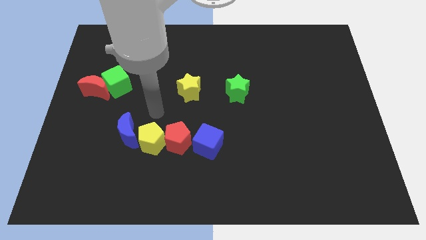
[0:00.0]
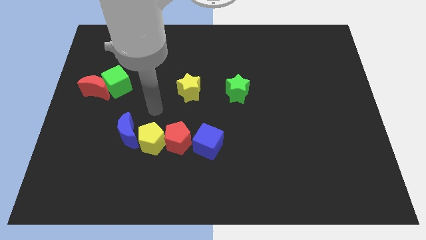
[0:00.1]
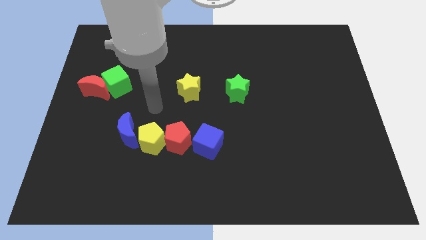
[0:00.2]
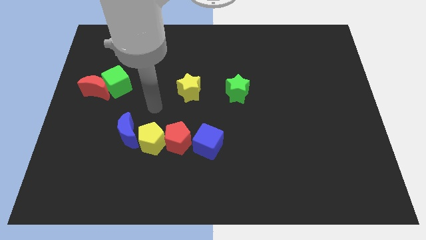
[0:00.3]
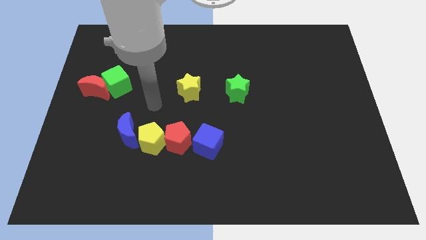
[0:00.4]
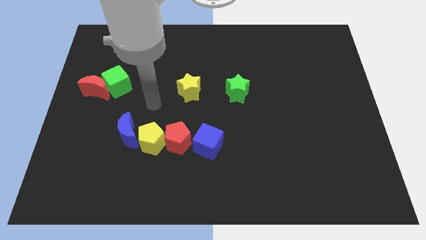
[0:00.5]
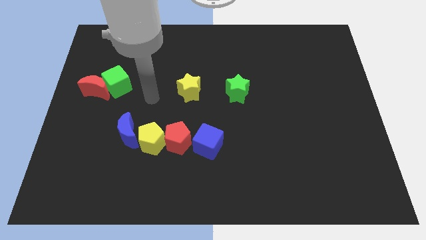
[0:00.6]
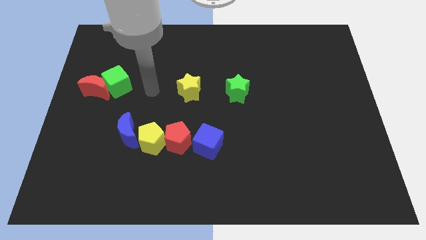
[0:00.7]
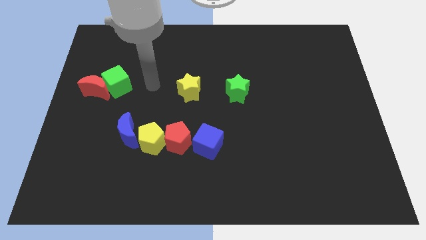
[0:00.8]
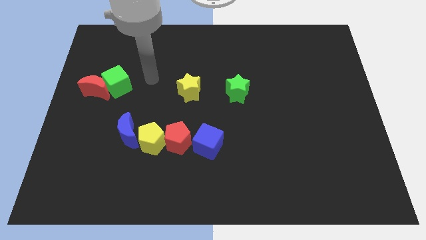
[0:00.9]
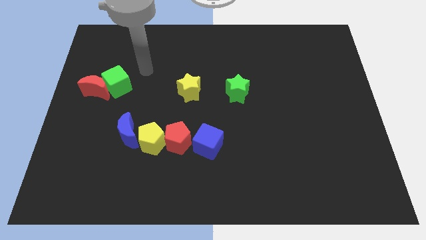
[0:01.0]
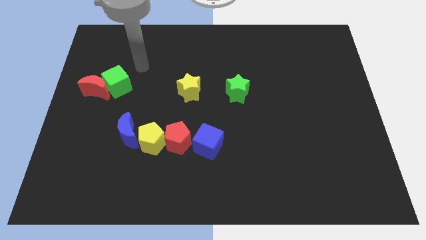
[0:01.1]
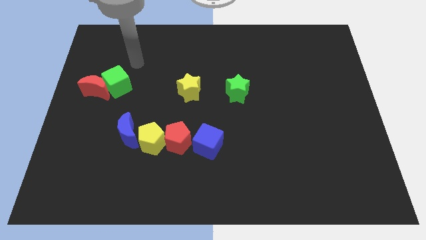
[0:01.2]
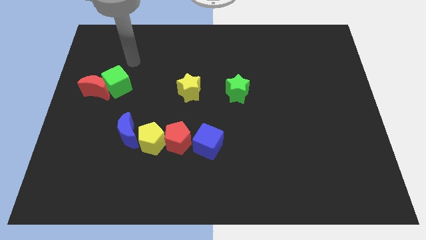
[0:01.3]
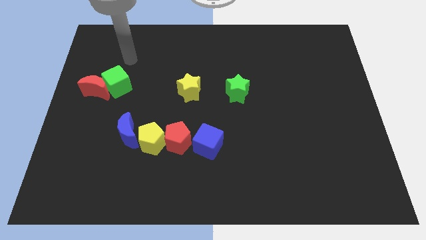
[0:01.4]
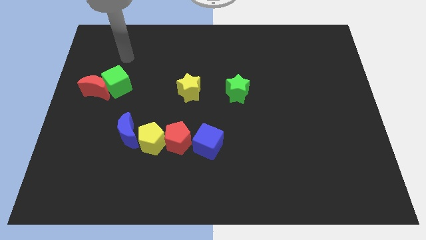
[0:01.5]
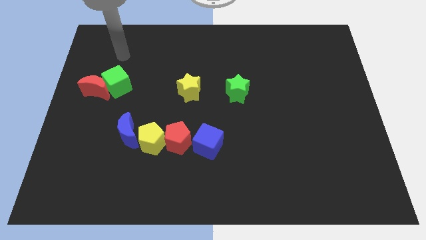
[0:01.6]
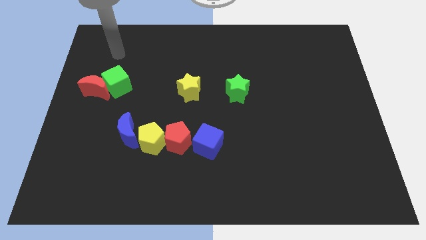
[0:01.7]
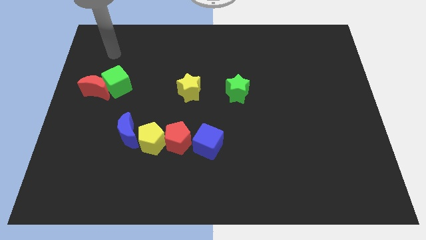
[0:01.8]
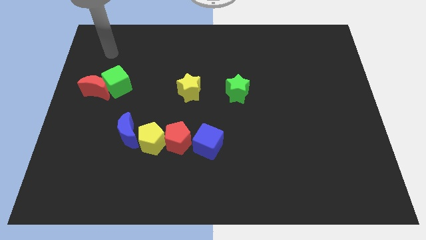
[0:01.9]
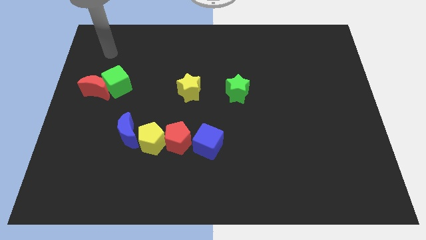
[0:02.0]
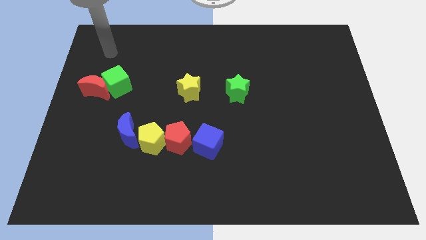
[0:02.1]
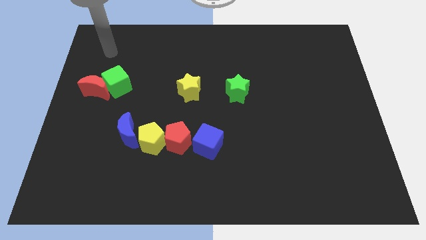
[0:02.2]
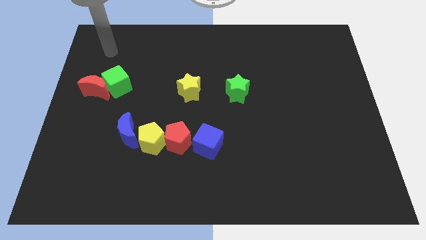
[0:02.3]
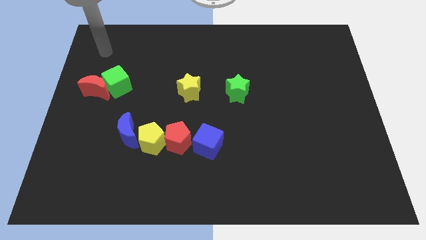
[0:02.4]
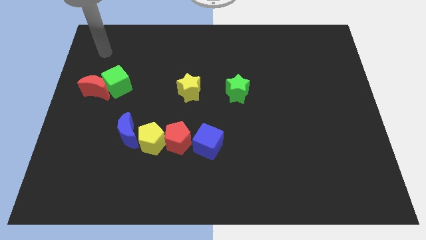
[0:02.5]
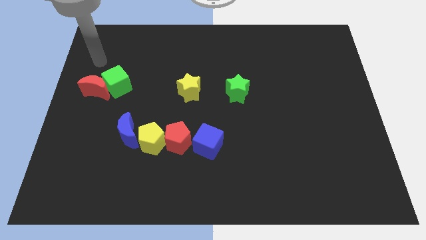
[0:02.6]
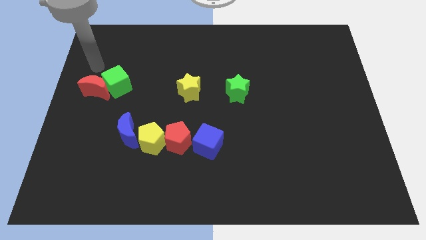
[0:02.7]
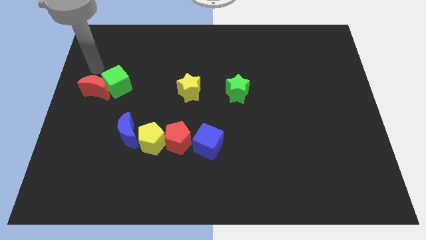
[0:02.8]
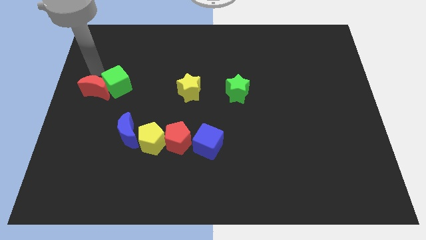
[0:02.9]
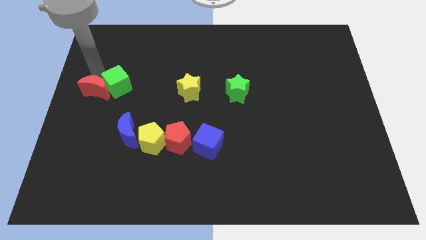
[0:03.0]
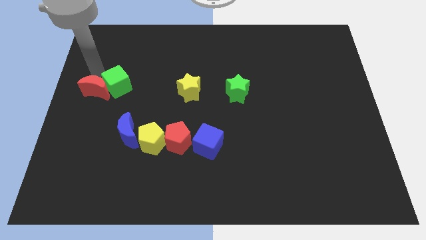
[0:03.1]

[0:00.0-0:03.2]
move the arm to the top of the red crescent

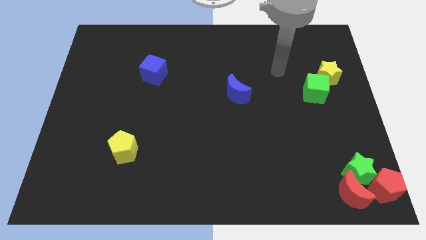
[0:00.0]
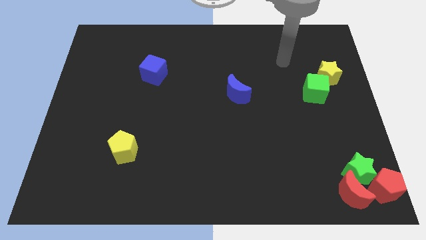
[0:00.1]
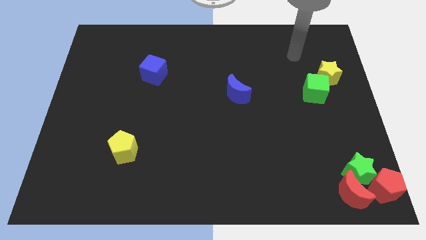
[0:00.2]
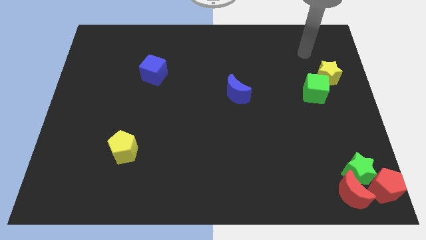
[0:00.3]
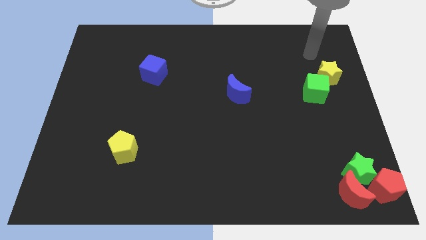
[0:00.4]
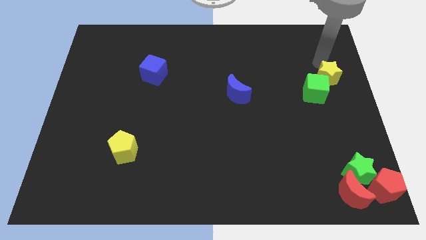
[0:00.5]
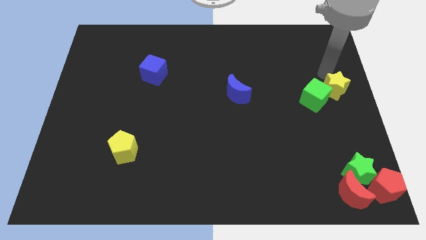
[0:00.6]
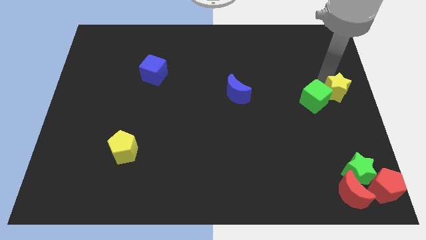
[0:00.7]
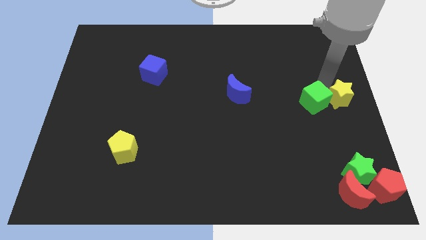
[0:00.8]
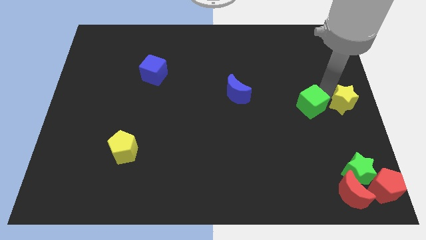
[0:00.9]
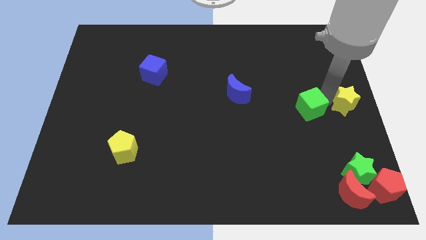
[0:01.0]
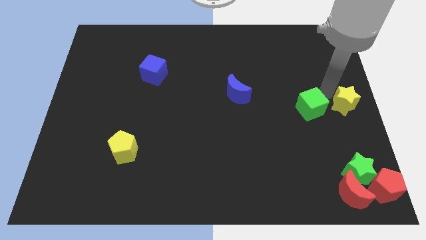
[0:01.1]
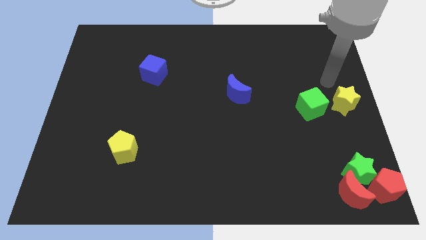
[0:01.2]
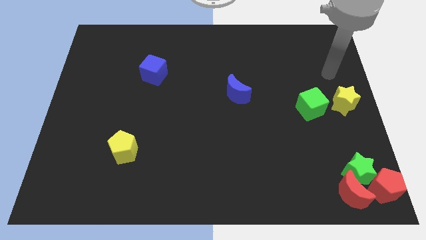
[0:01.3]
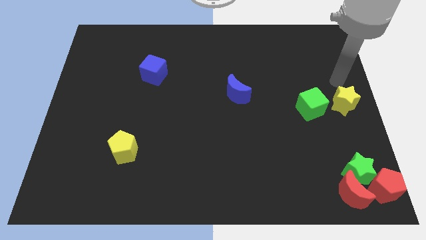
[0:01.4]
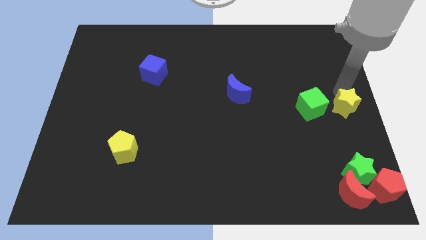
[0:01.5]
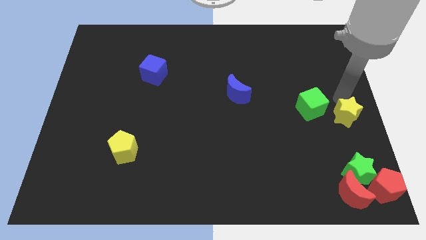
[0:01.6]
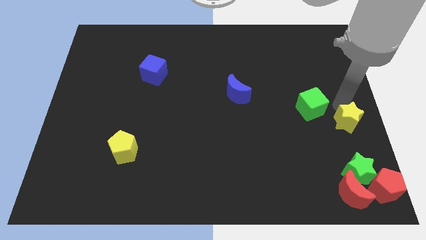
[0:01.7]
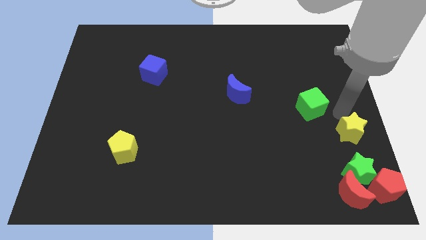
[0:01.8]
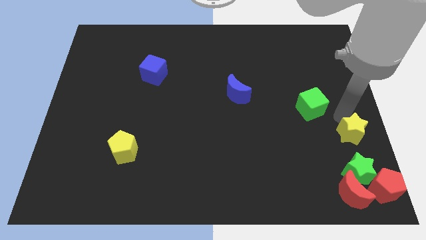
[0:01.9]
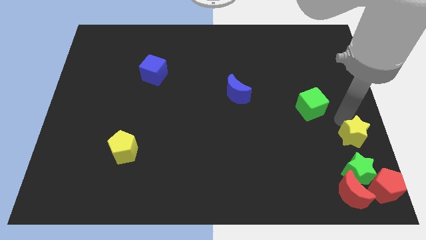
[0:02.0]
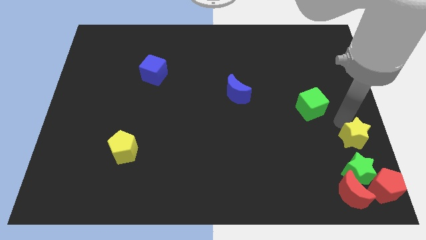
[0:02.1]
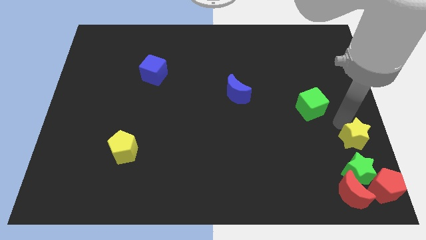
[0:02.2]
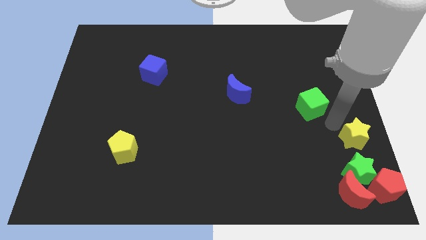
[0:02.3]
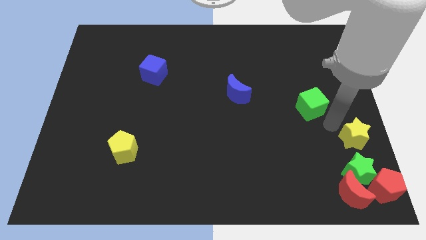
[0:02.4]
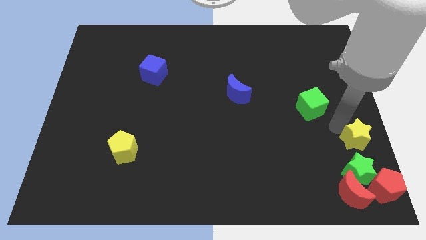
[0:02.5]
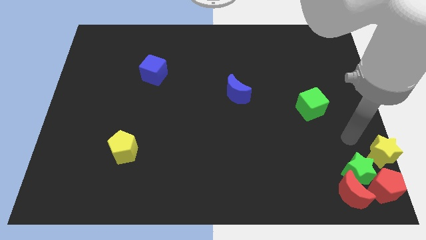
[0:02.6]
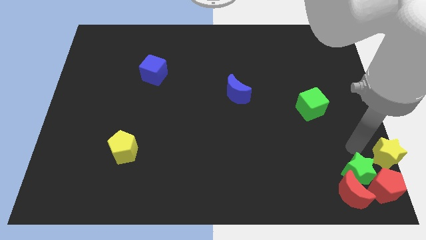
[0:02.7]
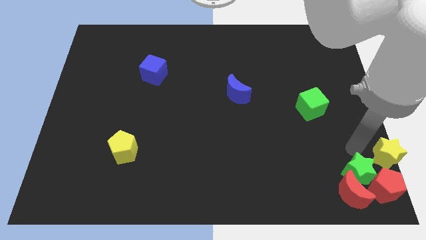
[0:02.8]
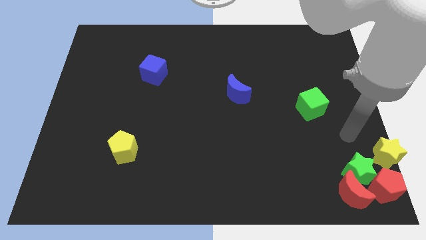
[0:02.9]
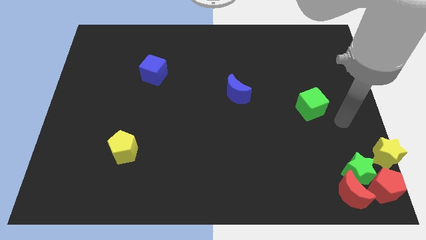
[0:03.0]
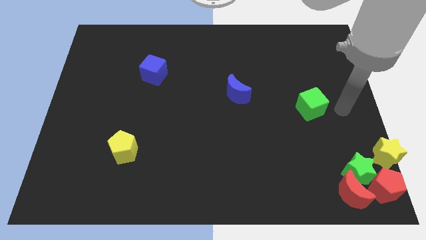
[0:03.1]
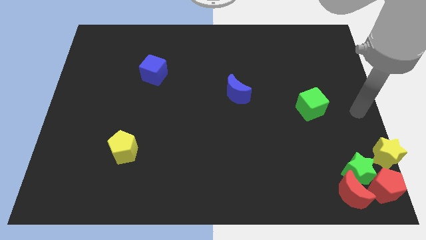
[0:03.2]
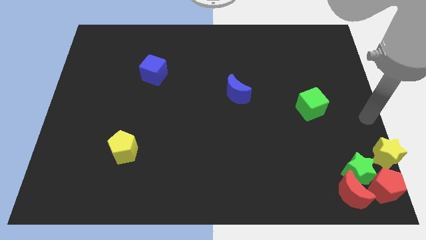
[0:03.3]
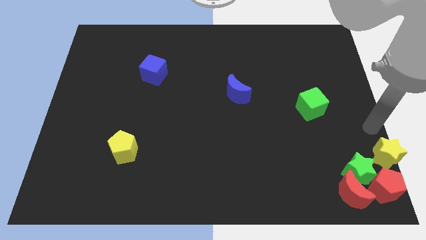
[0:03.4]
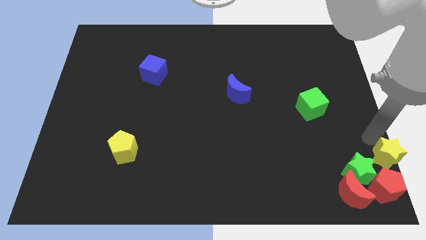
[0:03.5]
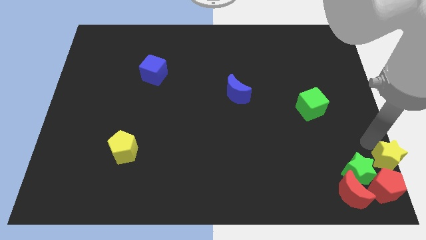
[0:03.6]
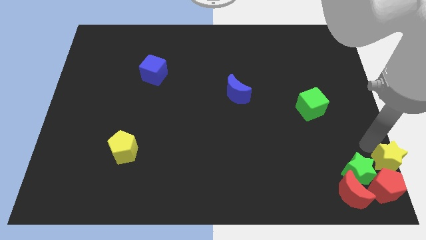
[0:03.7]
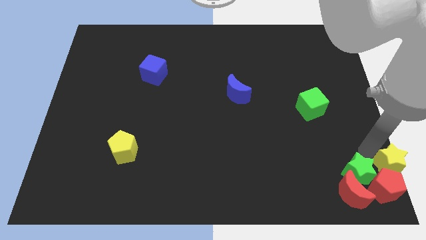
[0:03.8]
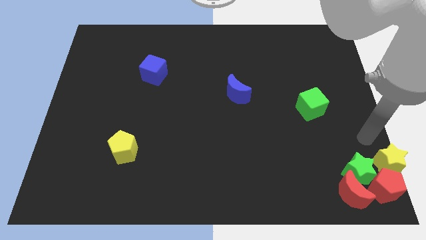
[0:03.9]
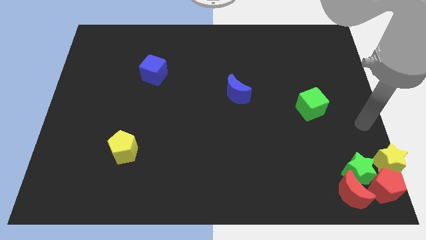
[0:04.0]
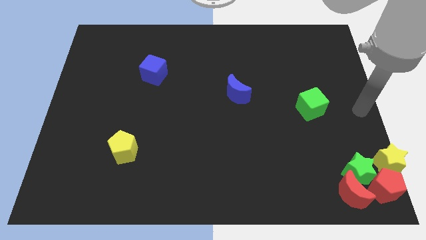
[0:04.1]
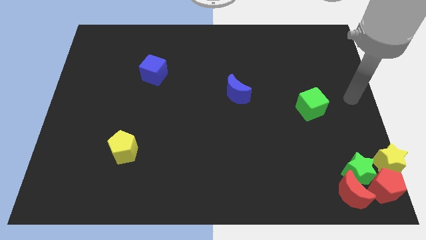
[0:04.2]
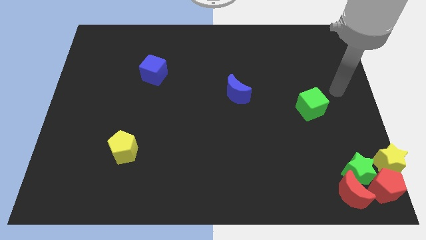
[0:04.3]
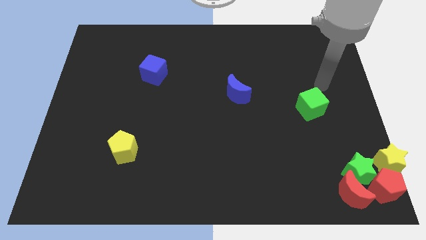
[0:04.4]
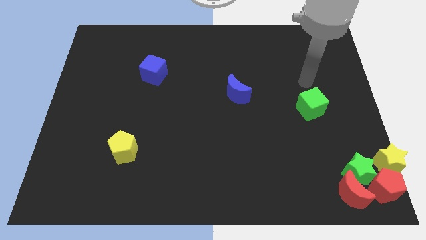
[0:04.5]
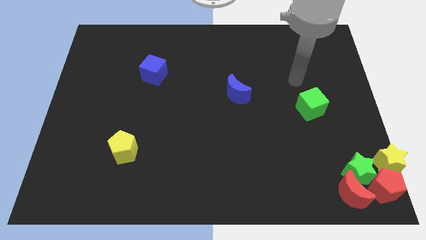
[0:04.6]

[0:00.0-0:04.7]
move the yellow star towards the bottom right

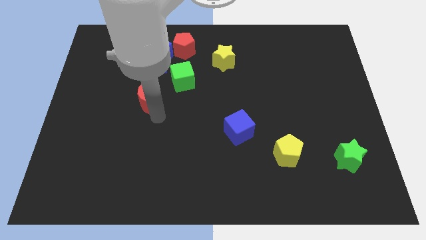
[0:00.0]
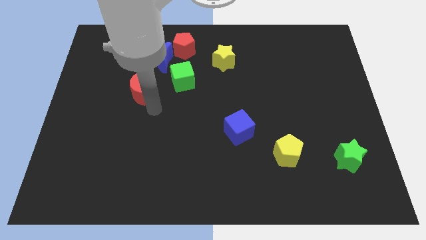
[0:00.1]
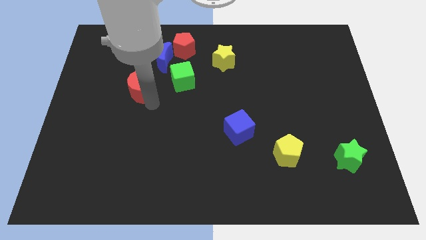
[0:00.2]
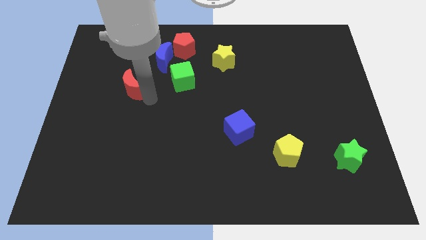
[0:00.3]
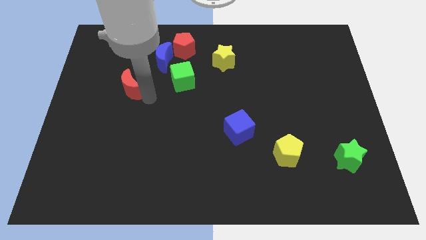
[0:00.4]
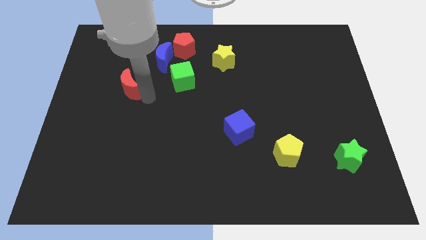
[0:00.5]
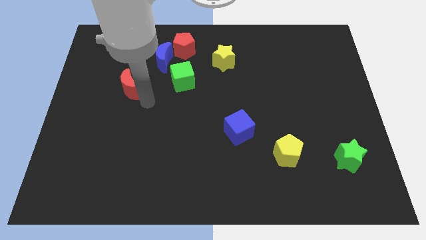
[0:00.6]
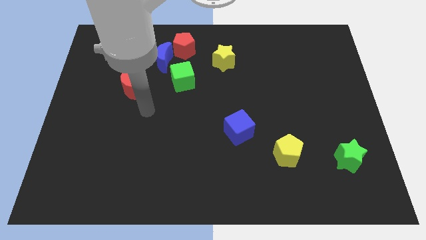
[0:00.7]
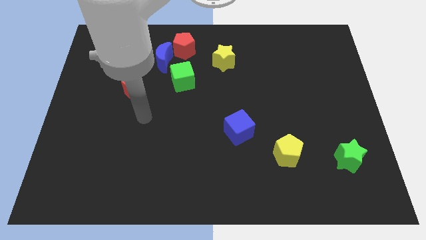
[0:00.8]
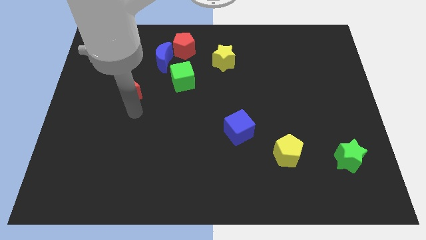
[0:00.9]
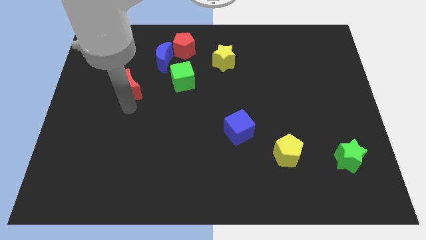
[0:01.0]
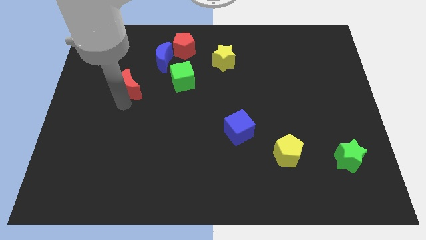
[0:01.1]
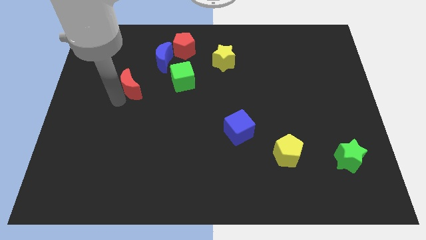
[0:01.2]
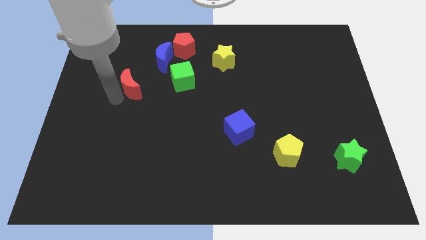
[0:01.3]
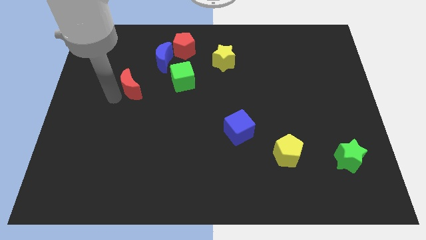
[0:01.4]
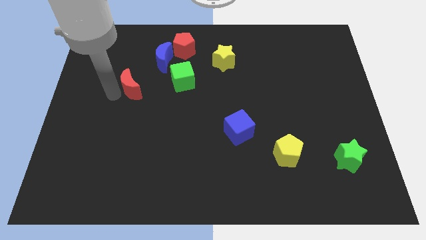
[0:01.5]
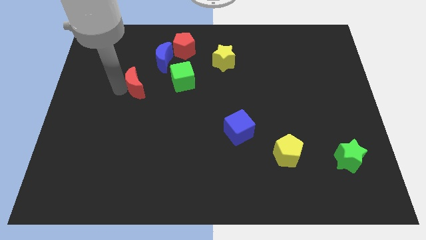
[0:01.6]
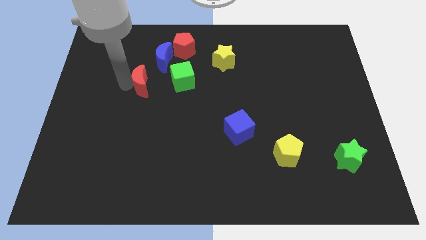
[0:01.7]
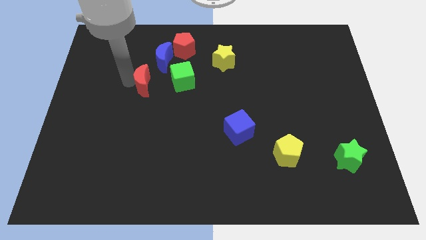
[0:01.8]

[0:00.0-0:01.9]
push the red moon to the left of the green cube
